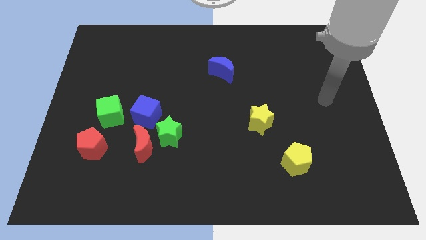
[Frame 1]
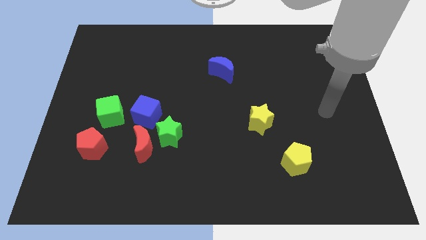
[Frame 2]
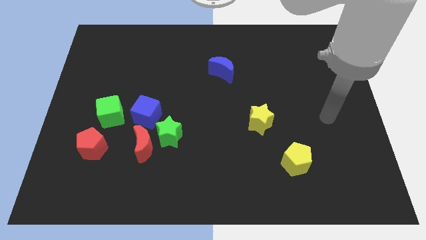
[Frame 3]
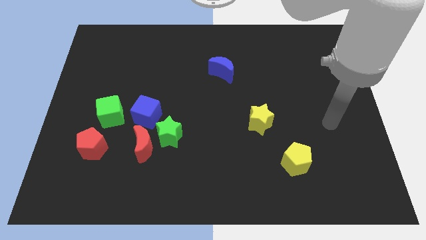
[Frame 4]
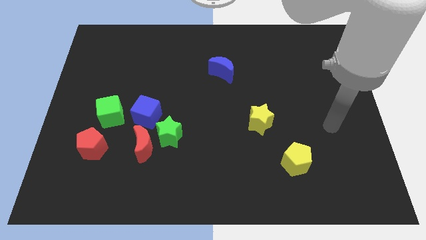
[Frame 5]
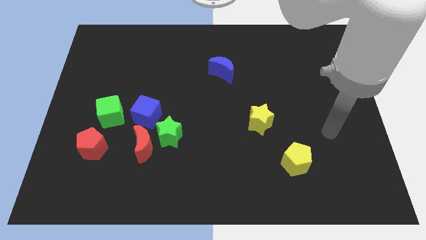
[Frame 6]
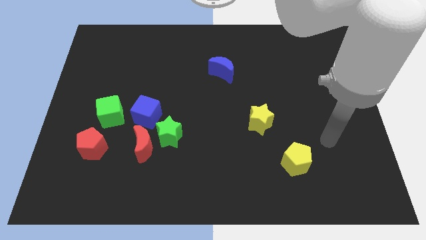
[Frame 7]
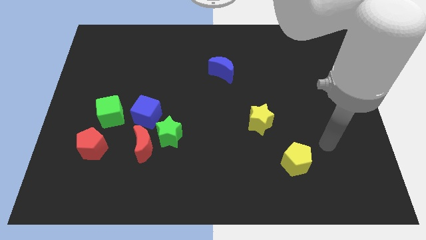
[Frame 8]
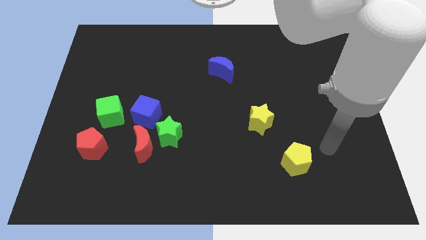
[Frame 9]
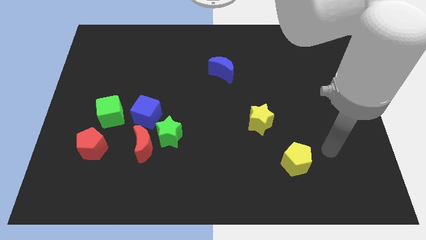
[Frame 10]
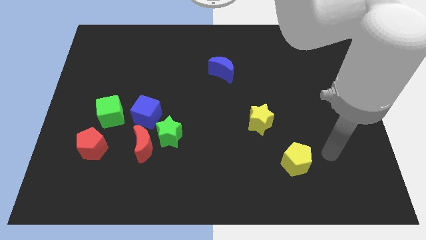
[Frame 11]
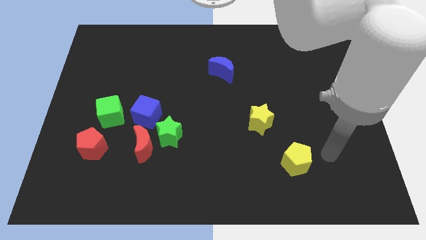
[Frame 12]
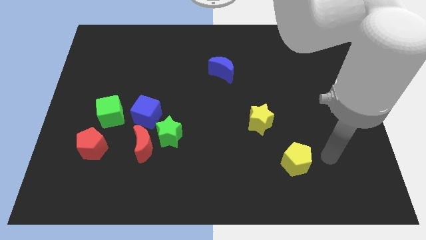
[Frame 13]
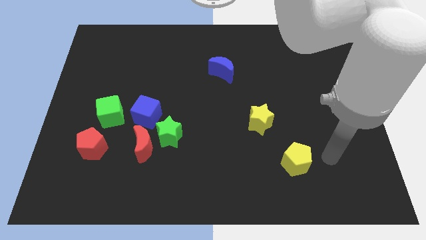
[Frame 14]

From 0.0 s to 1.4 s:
move your arm to the right side of the yellow pentagon

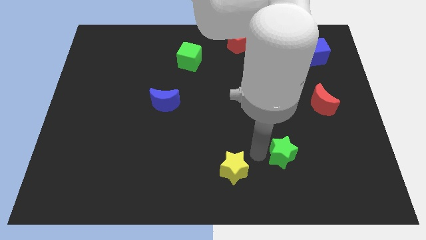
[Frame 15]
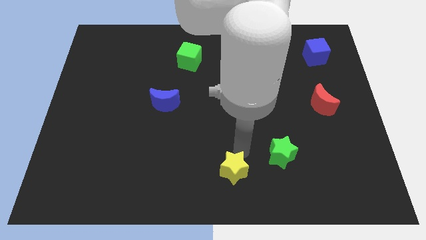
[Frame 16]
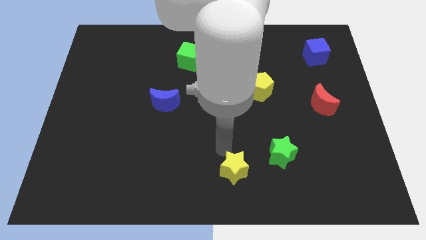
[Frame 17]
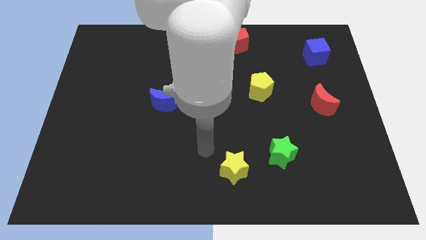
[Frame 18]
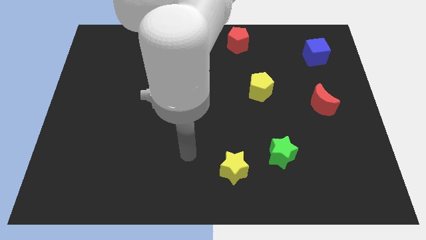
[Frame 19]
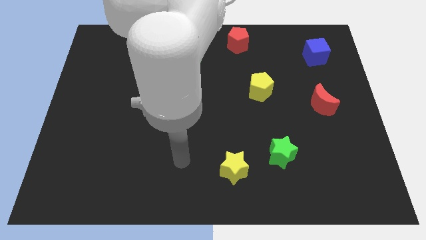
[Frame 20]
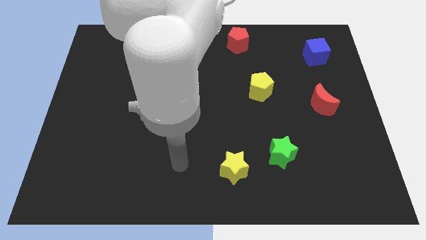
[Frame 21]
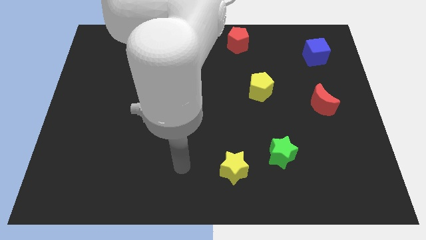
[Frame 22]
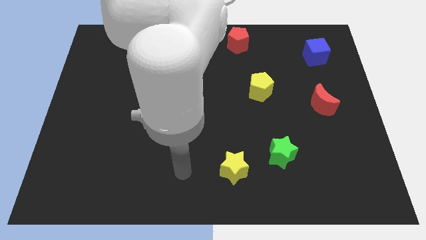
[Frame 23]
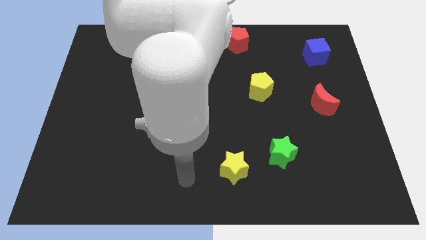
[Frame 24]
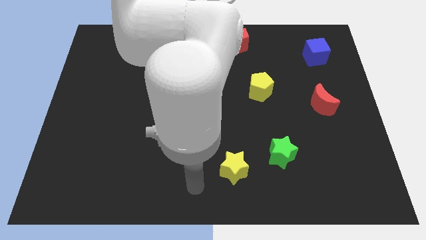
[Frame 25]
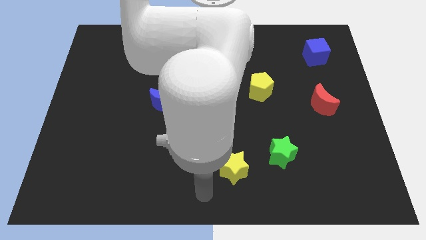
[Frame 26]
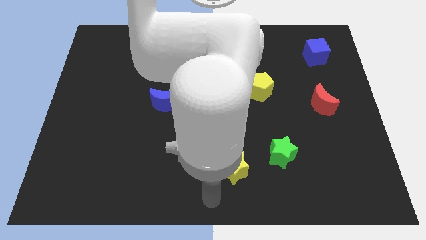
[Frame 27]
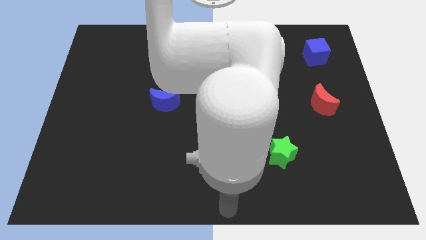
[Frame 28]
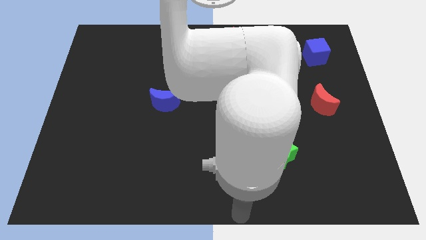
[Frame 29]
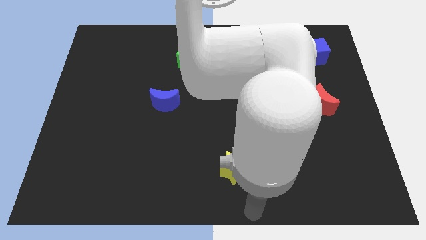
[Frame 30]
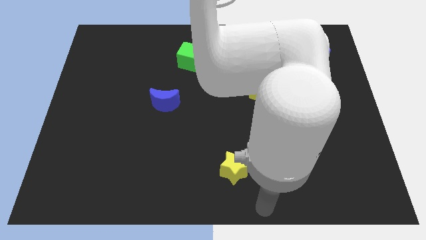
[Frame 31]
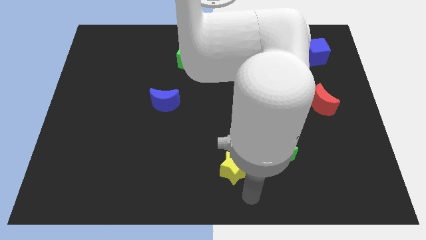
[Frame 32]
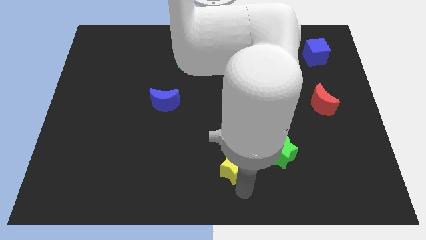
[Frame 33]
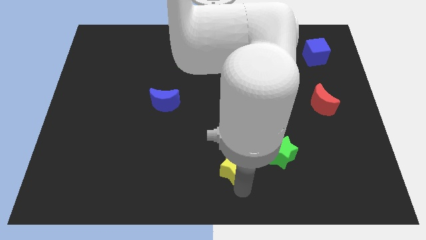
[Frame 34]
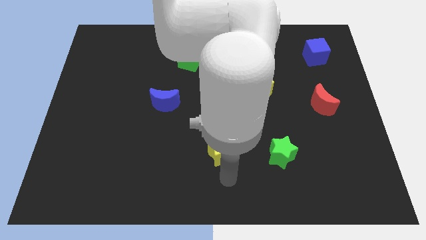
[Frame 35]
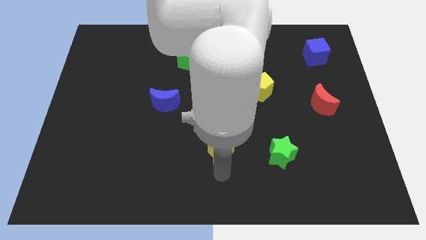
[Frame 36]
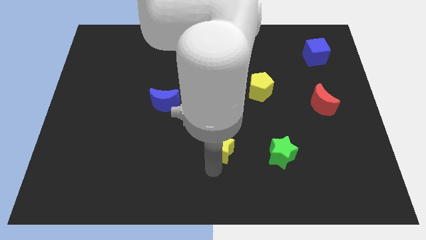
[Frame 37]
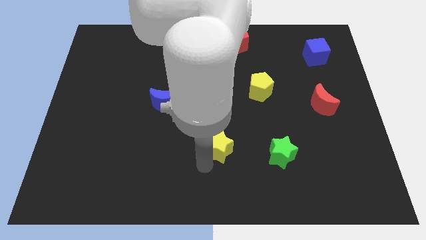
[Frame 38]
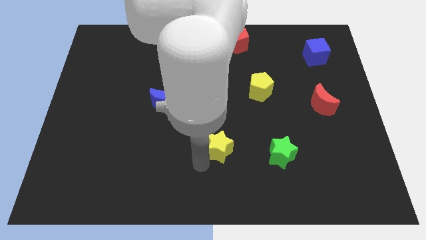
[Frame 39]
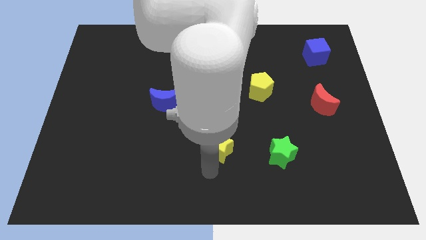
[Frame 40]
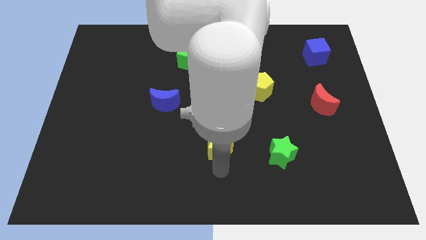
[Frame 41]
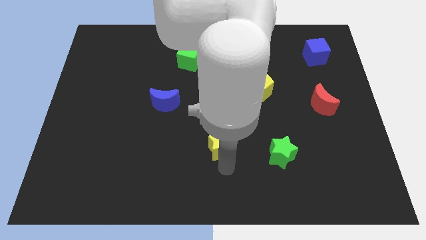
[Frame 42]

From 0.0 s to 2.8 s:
push the yellow star to the top

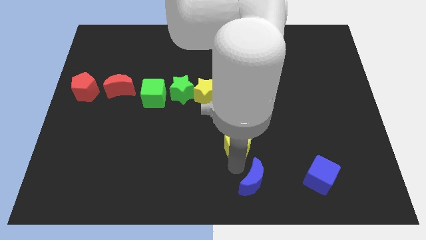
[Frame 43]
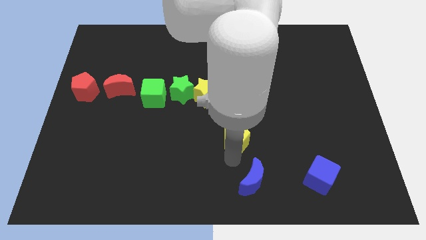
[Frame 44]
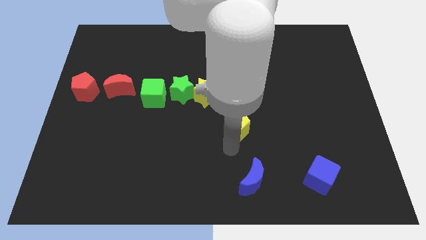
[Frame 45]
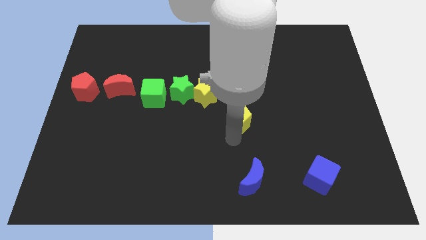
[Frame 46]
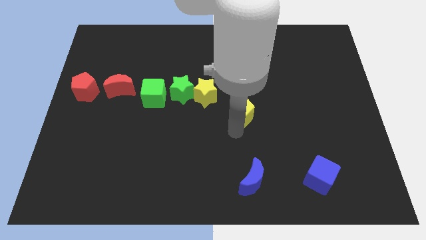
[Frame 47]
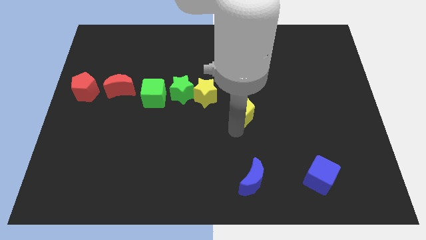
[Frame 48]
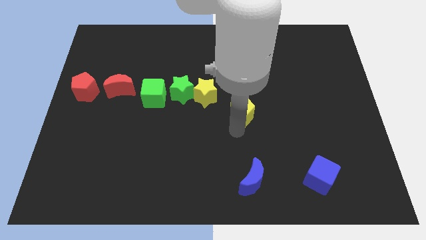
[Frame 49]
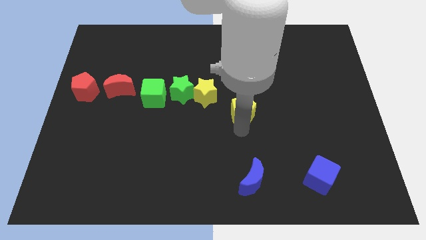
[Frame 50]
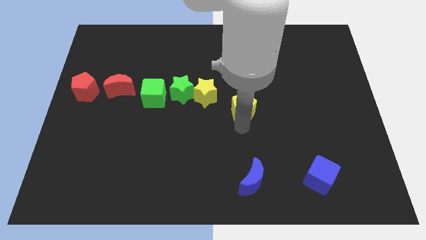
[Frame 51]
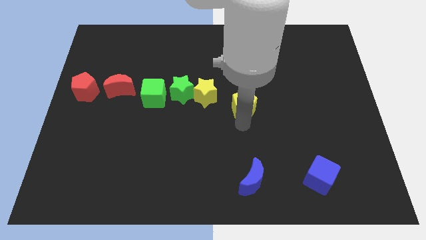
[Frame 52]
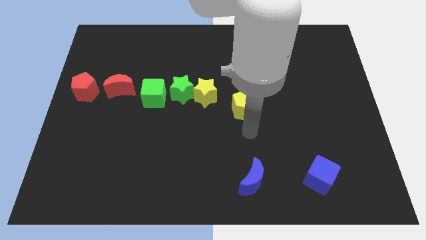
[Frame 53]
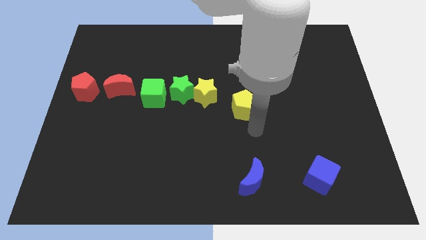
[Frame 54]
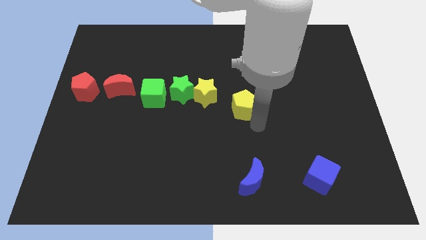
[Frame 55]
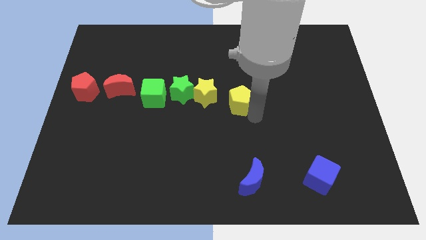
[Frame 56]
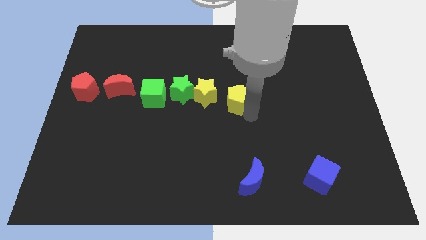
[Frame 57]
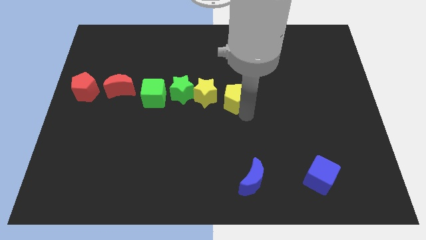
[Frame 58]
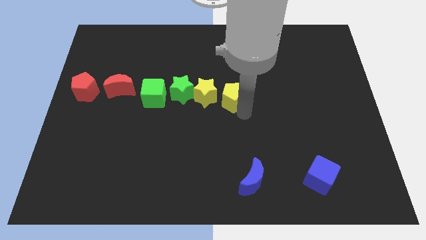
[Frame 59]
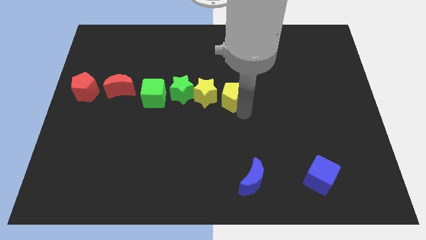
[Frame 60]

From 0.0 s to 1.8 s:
move the yellow pentagon to the right of the yellow star

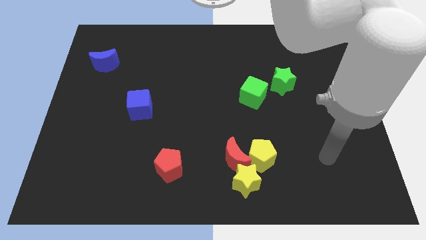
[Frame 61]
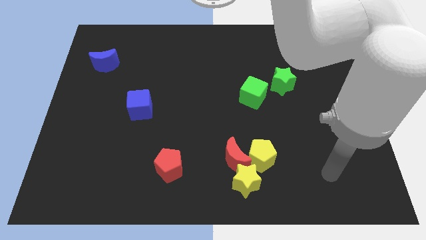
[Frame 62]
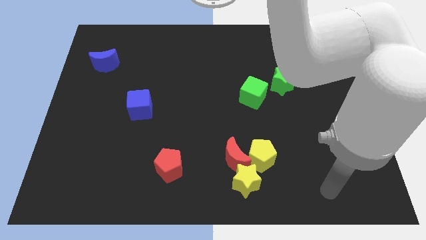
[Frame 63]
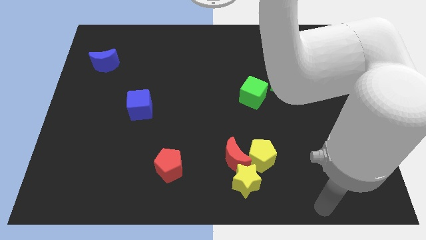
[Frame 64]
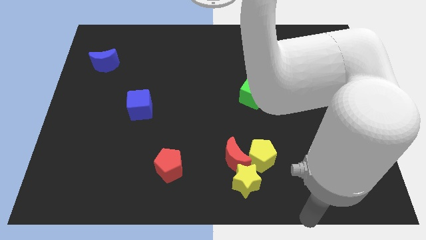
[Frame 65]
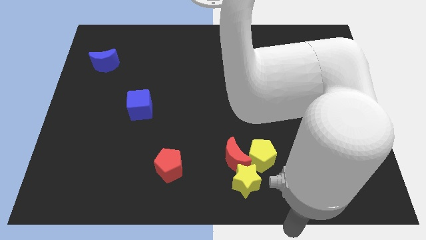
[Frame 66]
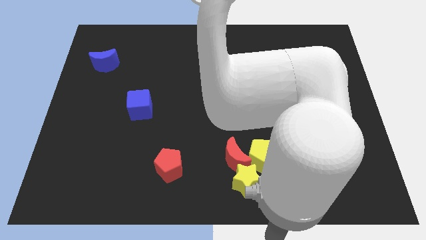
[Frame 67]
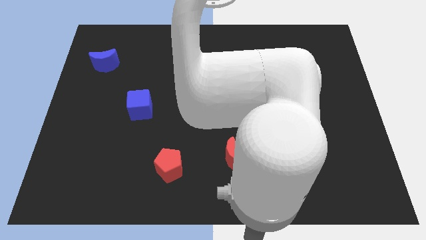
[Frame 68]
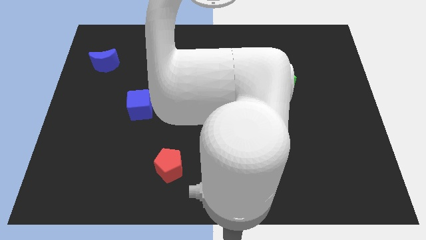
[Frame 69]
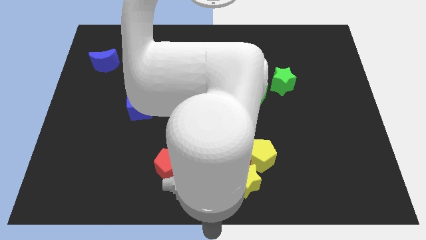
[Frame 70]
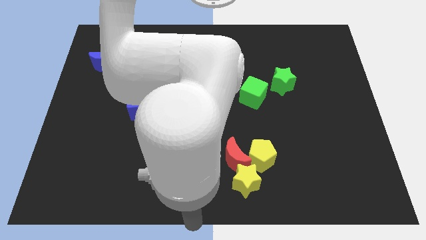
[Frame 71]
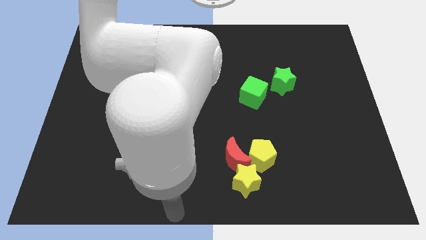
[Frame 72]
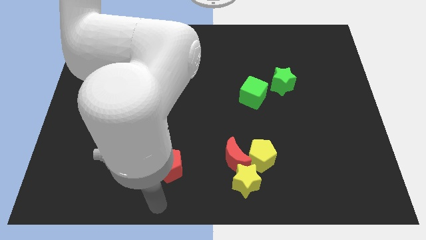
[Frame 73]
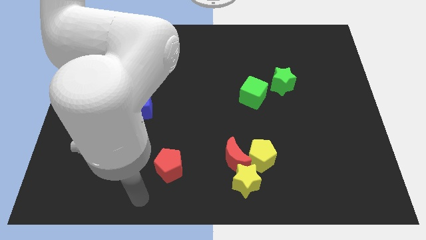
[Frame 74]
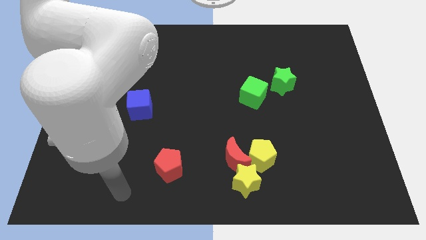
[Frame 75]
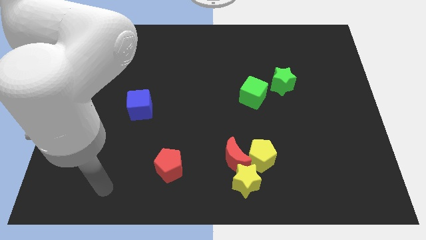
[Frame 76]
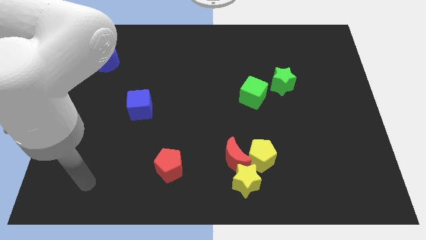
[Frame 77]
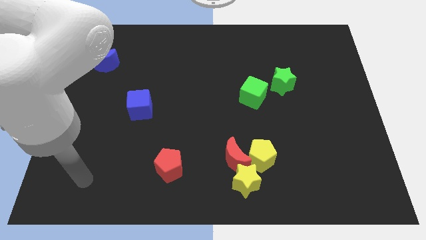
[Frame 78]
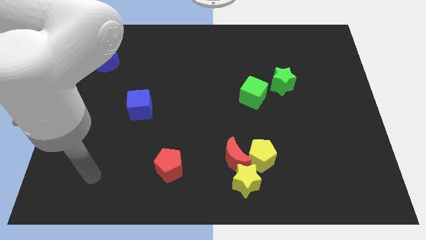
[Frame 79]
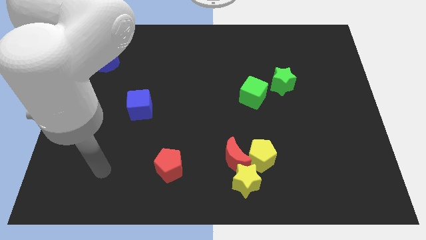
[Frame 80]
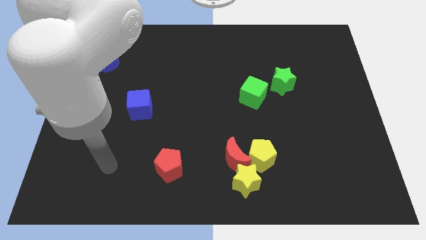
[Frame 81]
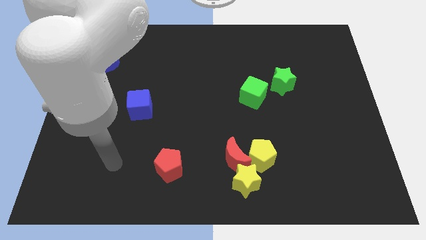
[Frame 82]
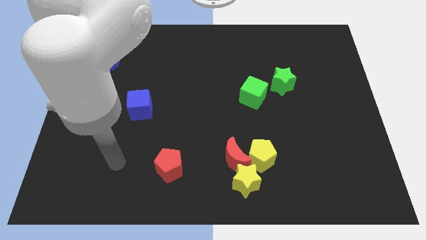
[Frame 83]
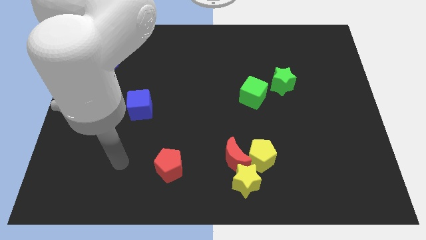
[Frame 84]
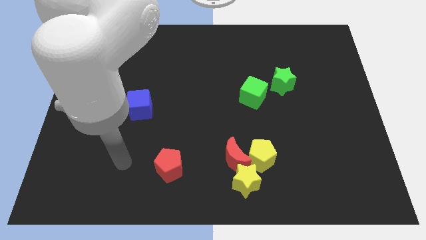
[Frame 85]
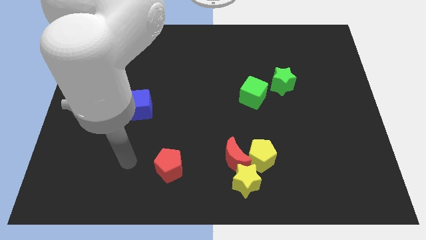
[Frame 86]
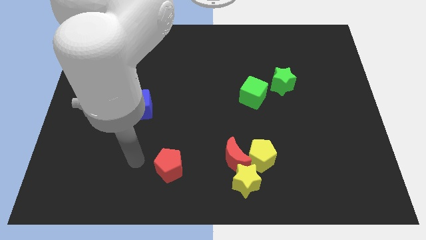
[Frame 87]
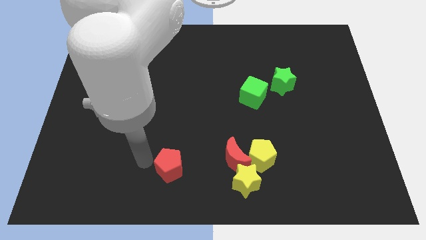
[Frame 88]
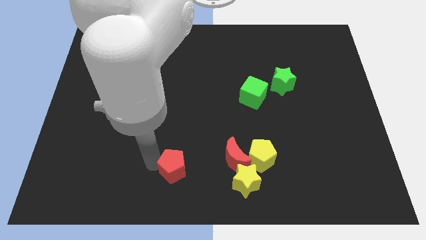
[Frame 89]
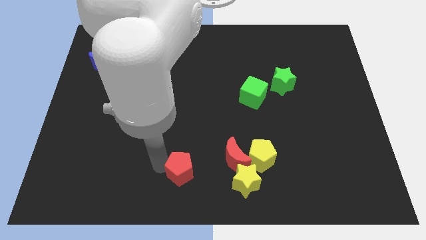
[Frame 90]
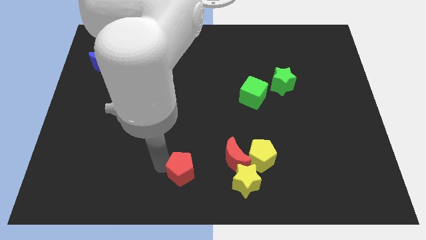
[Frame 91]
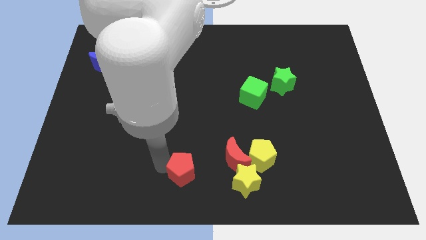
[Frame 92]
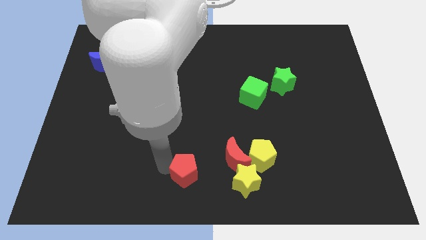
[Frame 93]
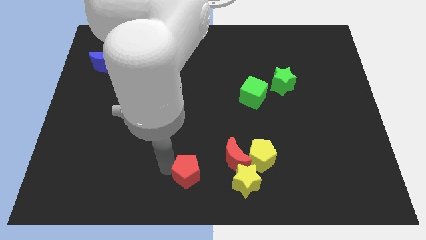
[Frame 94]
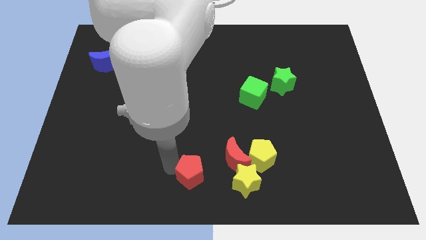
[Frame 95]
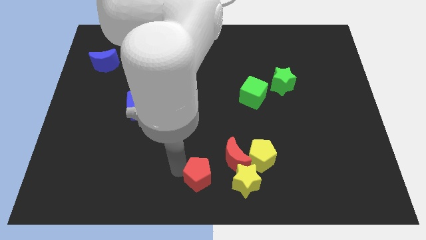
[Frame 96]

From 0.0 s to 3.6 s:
move the red pentagon slightly right
